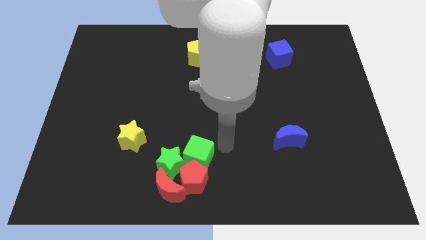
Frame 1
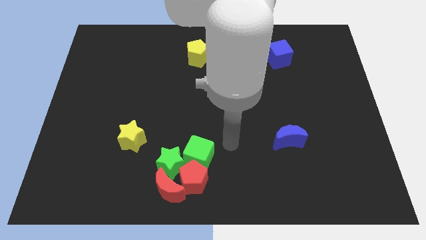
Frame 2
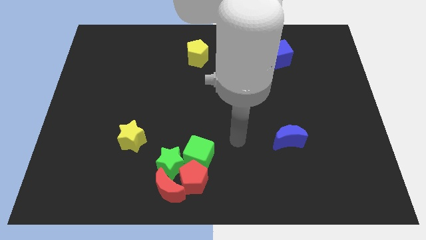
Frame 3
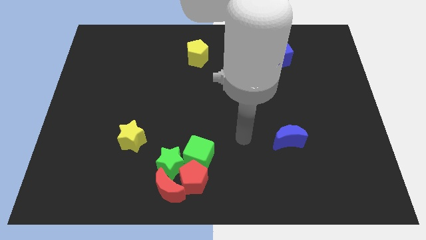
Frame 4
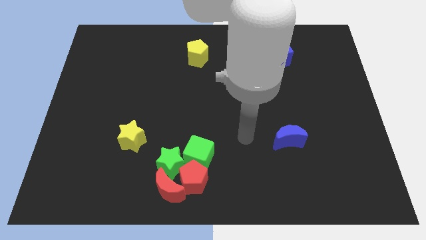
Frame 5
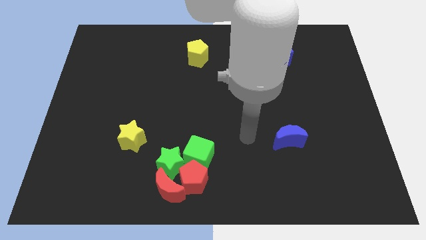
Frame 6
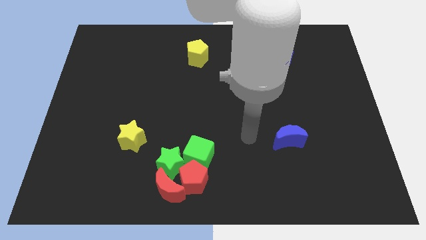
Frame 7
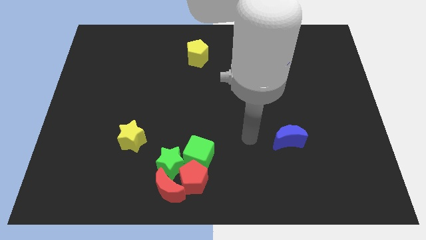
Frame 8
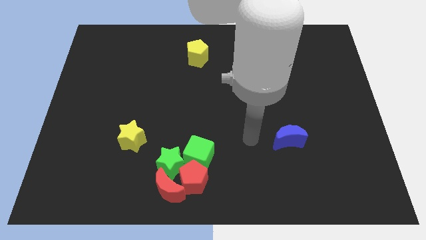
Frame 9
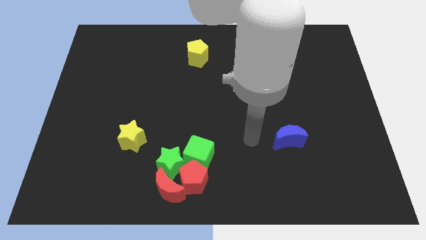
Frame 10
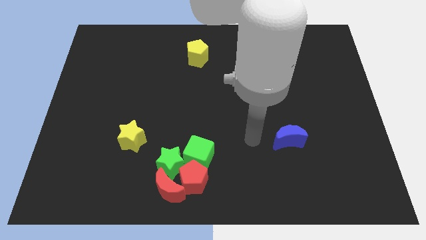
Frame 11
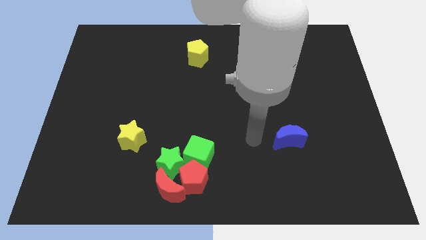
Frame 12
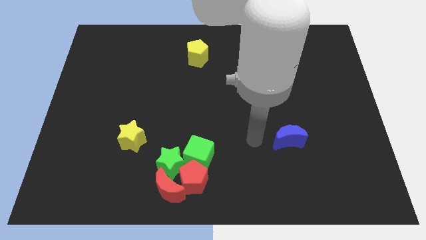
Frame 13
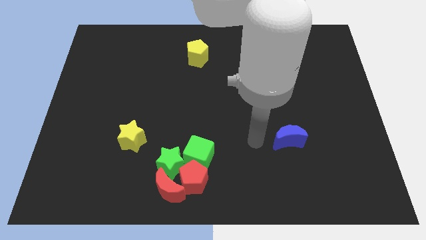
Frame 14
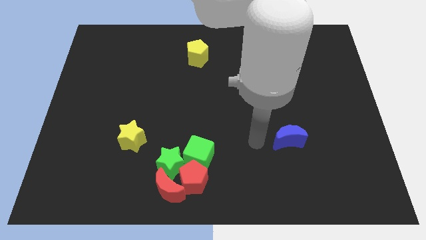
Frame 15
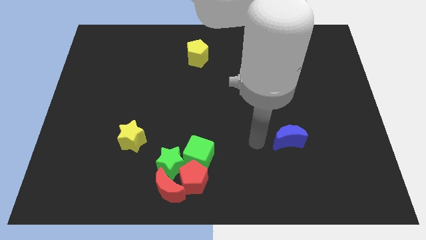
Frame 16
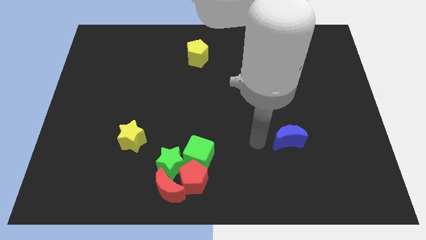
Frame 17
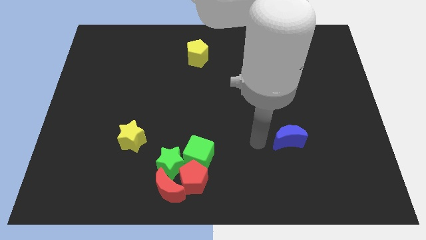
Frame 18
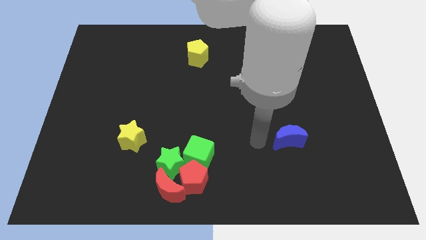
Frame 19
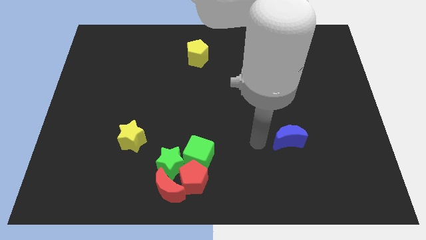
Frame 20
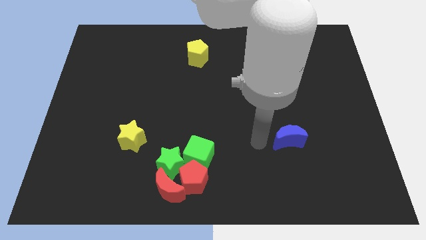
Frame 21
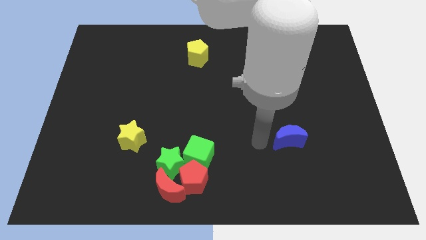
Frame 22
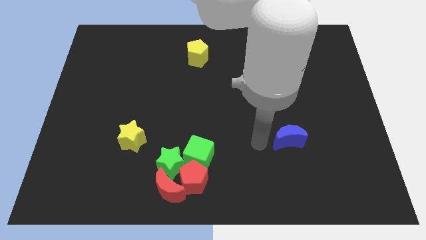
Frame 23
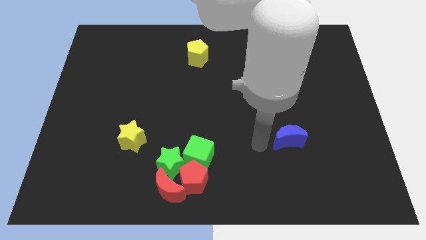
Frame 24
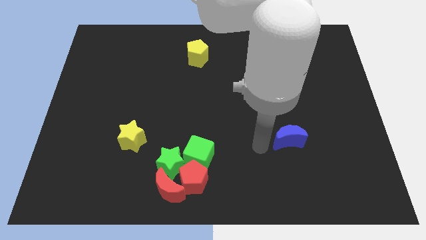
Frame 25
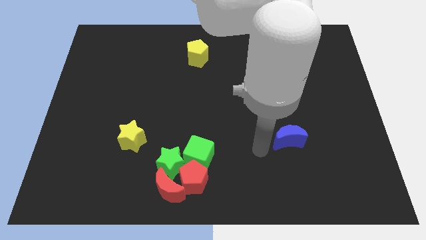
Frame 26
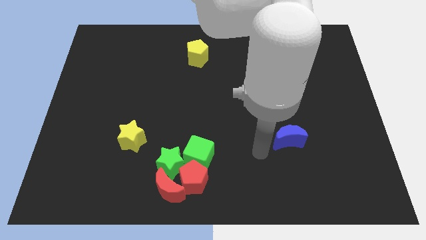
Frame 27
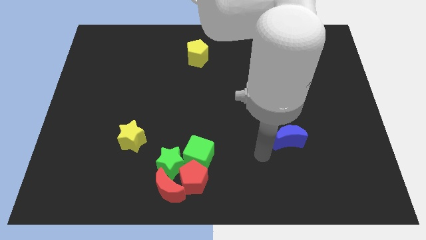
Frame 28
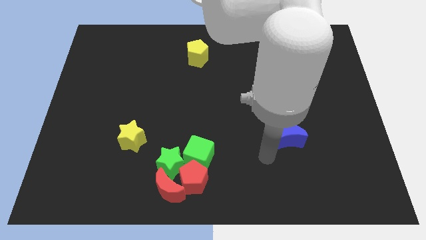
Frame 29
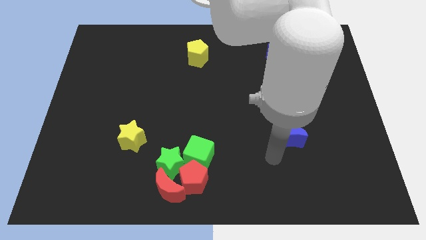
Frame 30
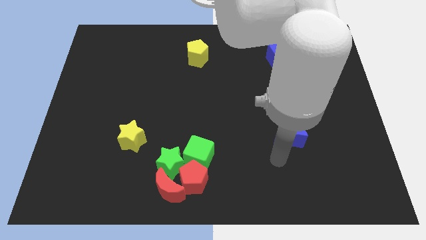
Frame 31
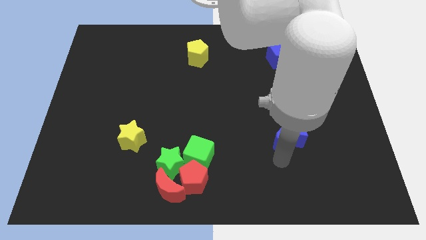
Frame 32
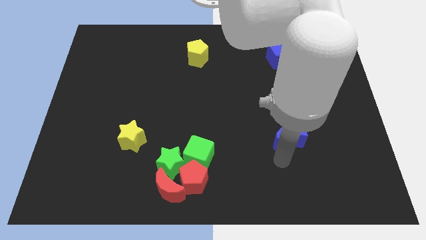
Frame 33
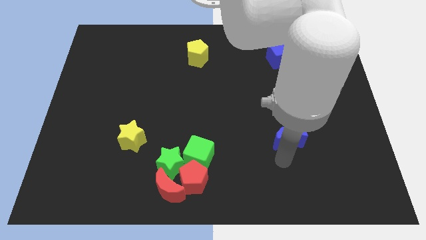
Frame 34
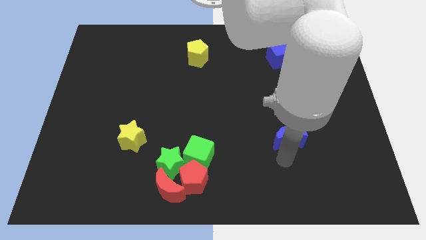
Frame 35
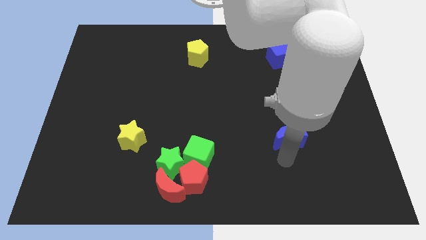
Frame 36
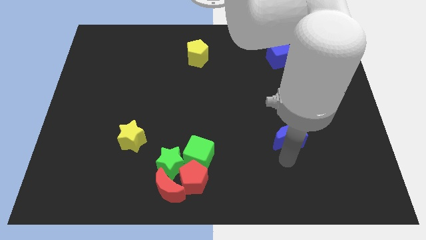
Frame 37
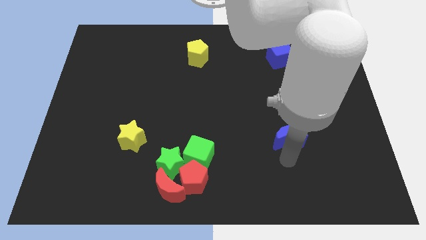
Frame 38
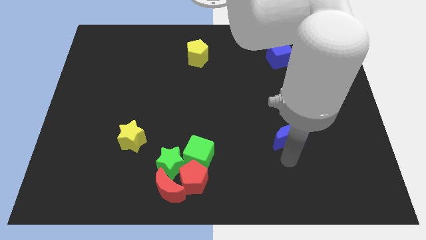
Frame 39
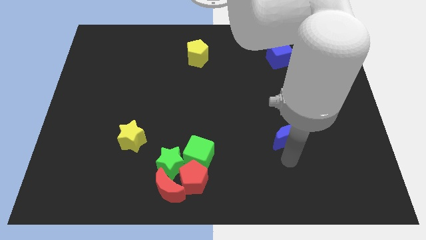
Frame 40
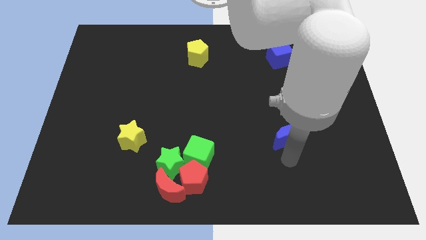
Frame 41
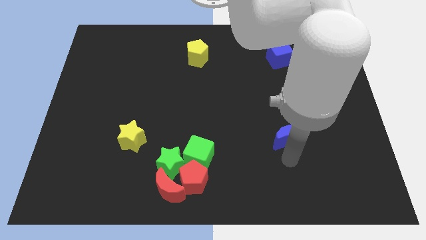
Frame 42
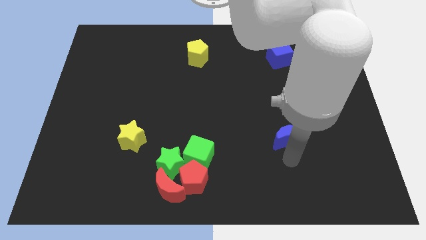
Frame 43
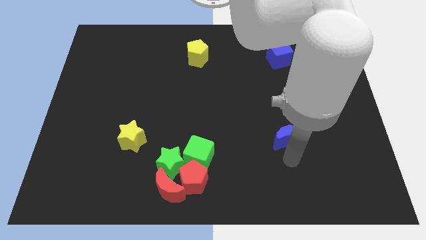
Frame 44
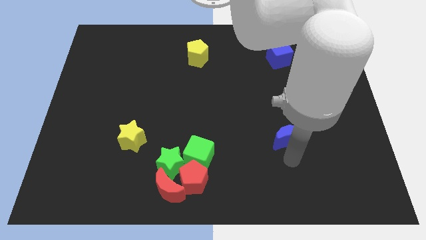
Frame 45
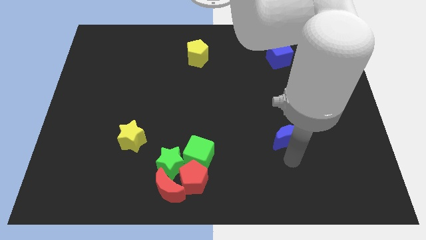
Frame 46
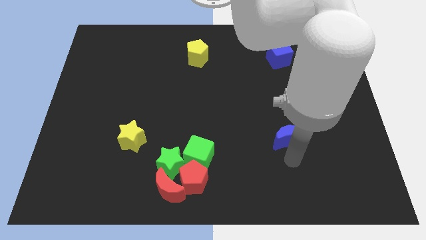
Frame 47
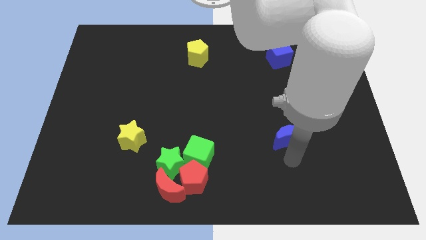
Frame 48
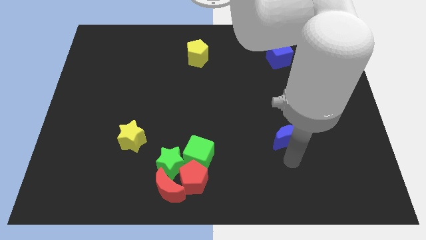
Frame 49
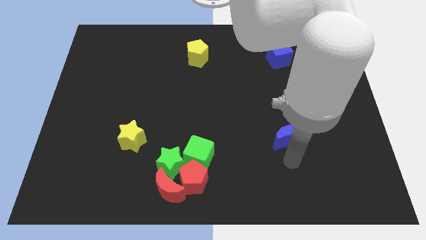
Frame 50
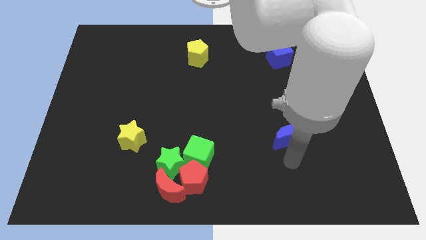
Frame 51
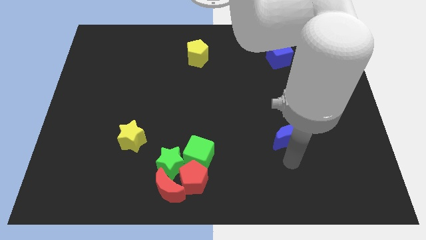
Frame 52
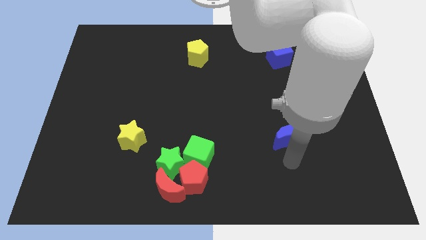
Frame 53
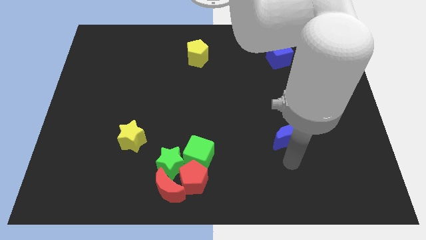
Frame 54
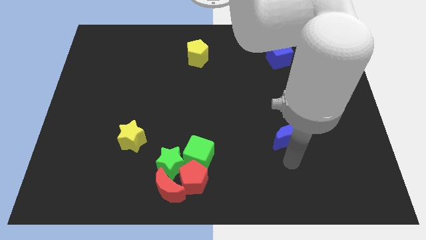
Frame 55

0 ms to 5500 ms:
move your arm below blue moon

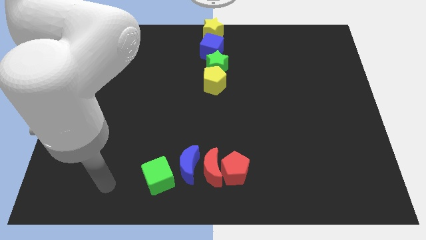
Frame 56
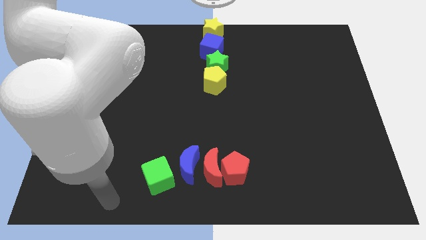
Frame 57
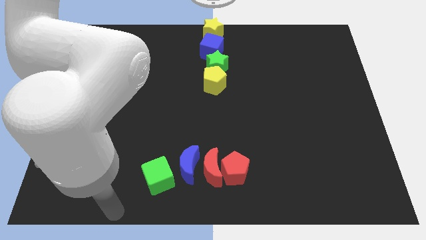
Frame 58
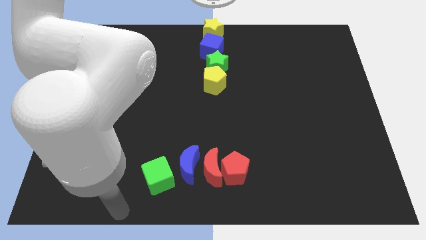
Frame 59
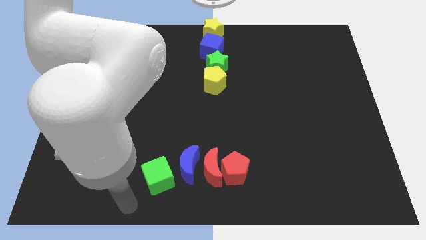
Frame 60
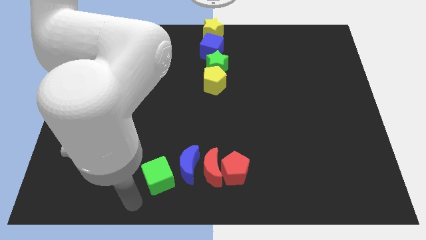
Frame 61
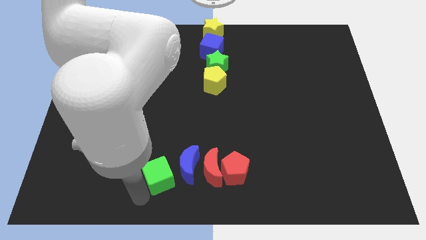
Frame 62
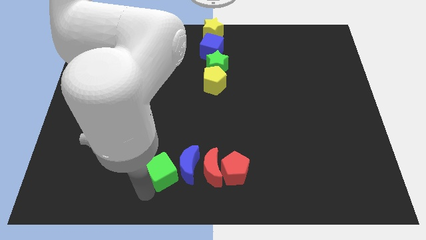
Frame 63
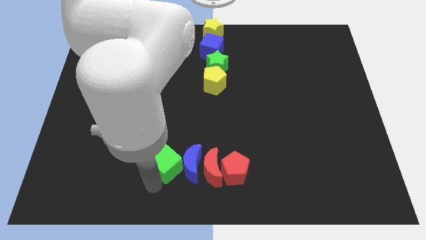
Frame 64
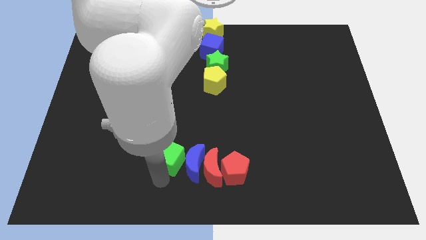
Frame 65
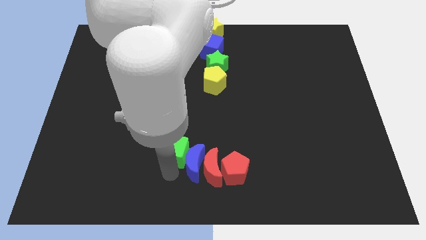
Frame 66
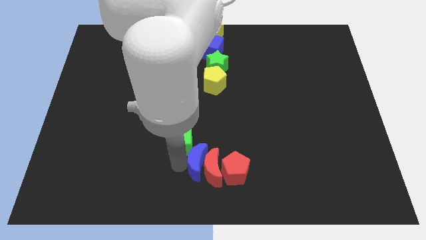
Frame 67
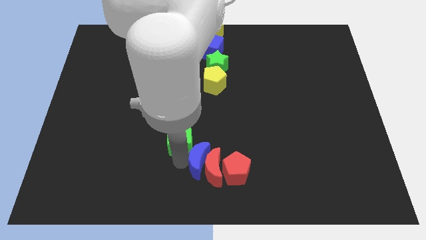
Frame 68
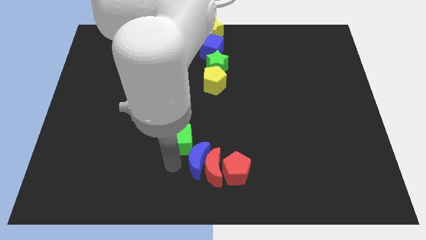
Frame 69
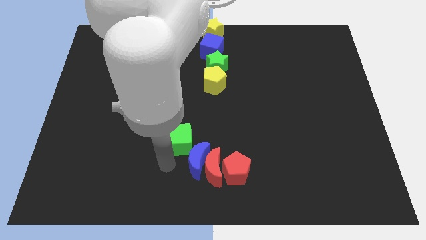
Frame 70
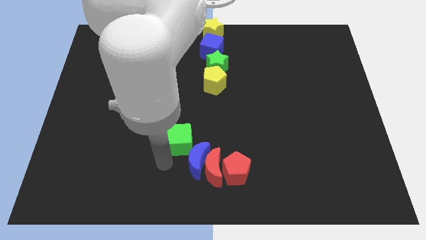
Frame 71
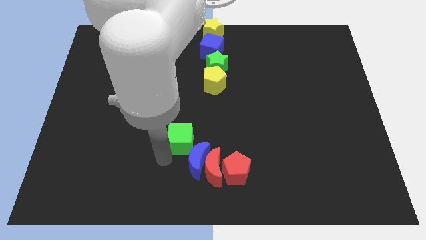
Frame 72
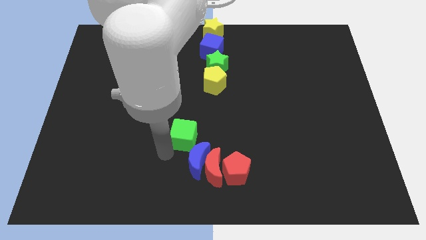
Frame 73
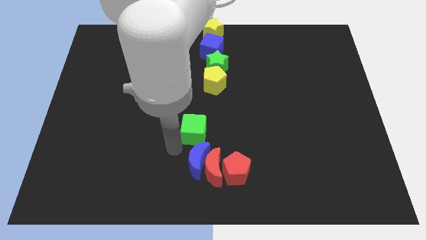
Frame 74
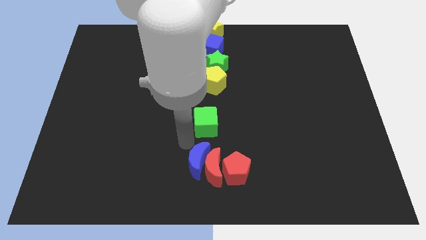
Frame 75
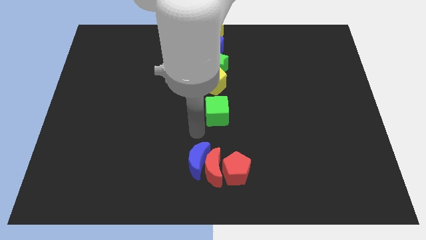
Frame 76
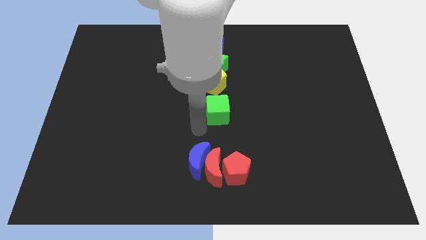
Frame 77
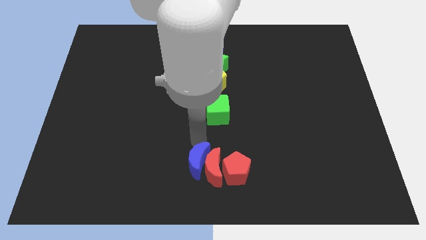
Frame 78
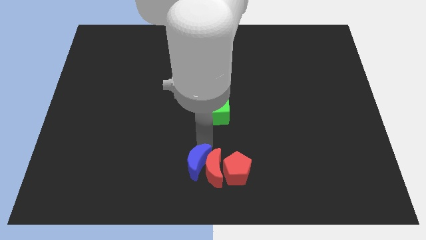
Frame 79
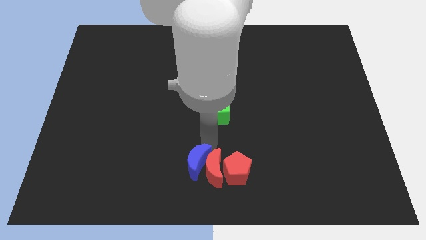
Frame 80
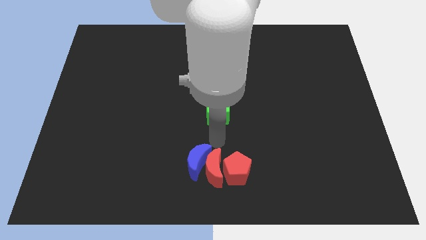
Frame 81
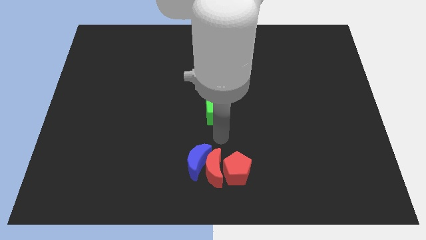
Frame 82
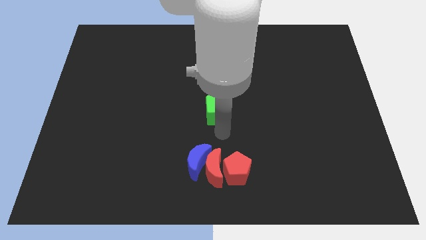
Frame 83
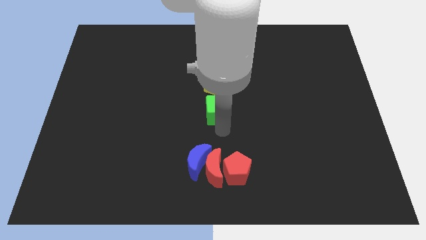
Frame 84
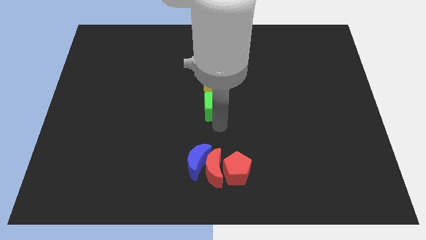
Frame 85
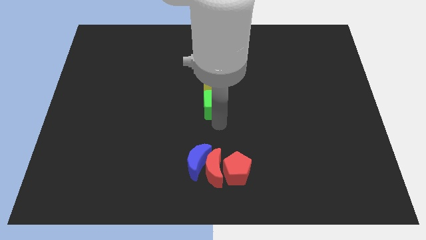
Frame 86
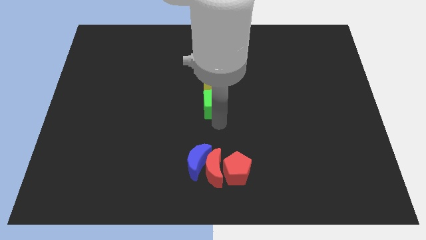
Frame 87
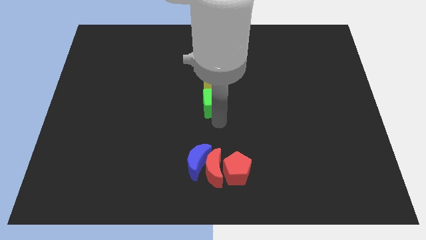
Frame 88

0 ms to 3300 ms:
push the green cube vertically below the yellow pentagon
